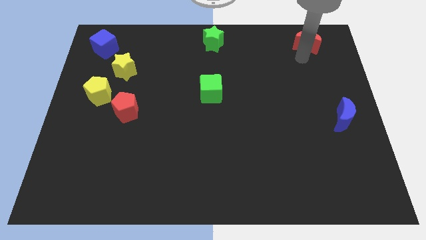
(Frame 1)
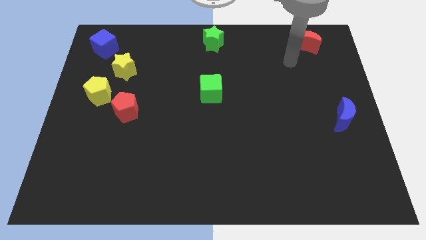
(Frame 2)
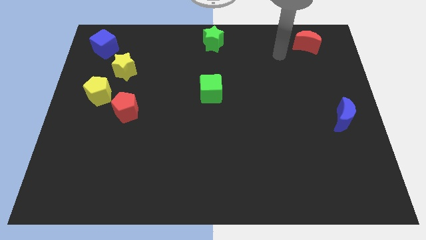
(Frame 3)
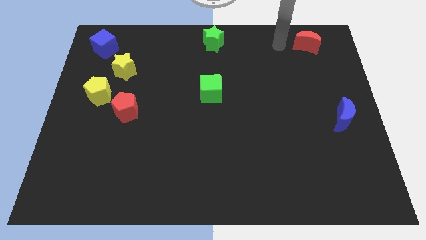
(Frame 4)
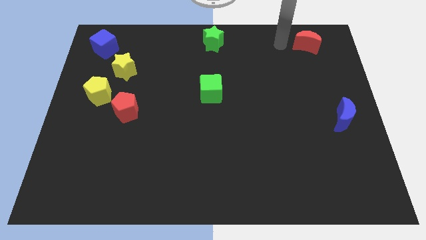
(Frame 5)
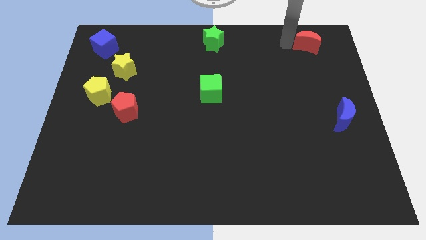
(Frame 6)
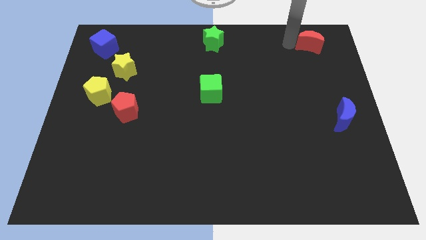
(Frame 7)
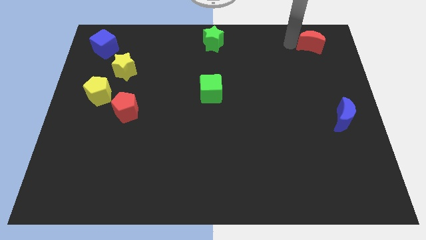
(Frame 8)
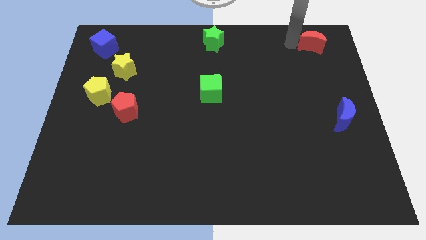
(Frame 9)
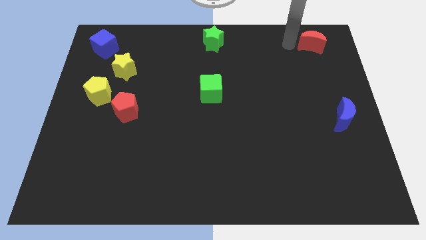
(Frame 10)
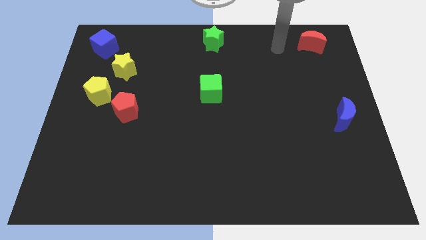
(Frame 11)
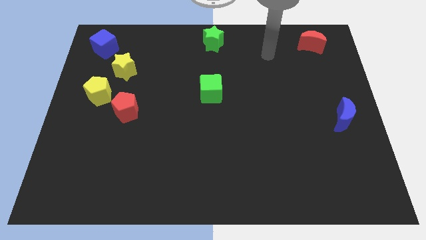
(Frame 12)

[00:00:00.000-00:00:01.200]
place the red crescent parallel to green star

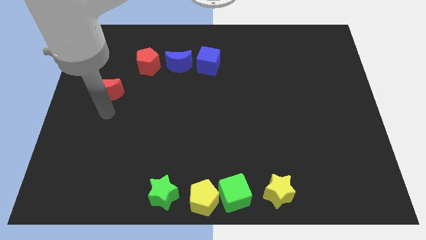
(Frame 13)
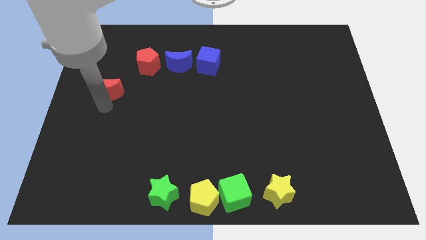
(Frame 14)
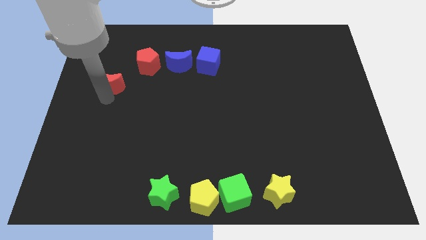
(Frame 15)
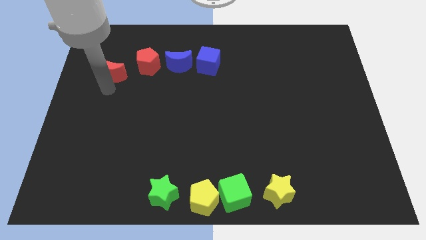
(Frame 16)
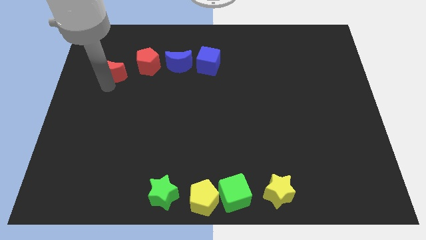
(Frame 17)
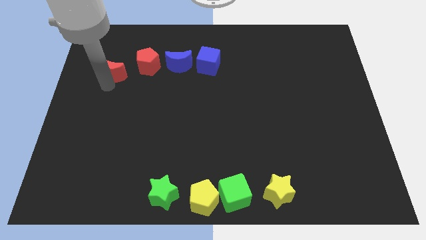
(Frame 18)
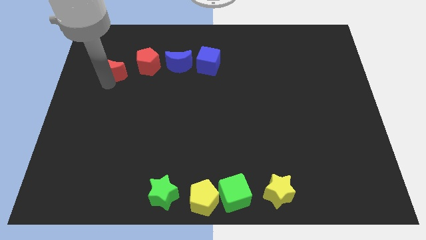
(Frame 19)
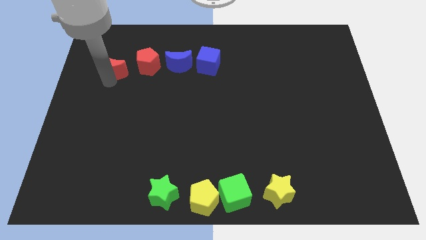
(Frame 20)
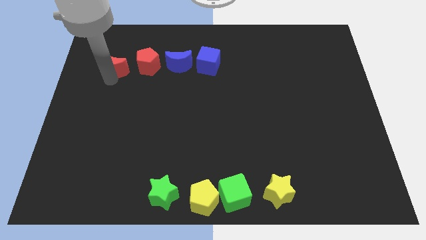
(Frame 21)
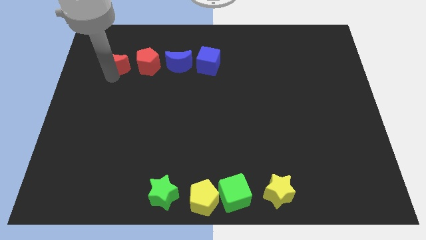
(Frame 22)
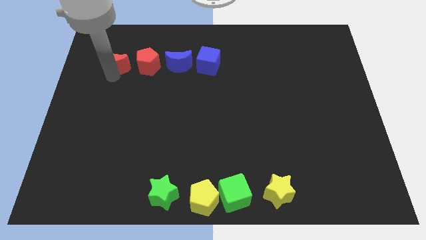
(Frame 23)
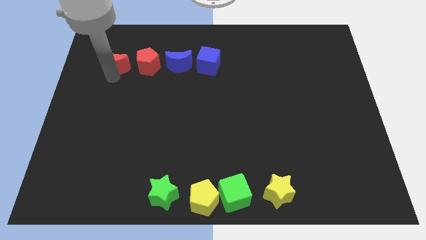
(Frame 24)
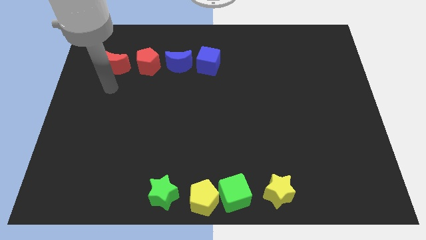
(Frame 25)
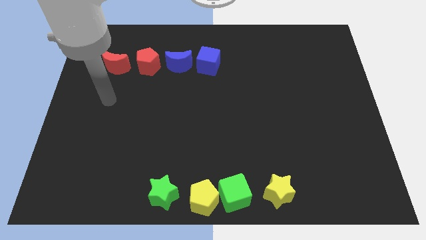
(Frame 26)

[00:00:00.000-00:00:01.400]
slightly push the red moon towards the red pentagon

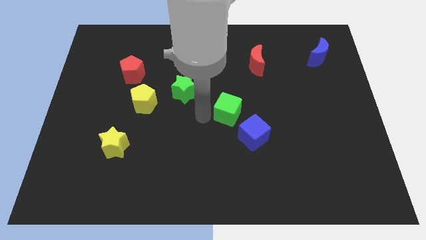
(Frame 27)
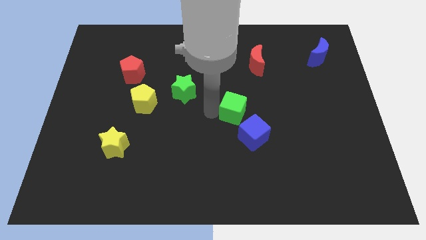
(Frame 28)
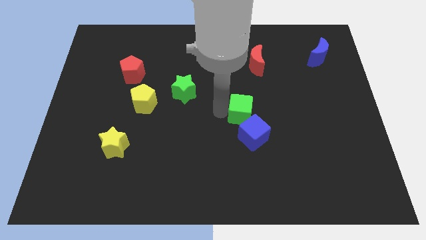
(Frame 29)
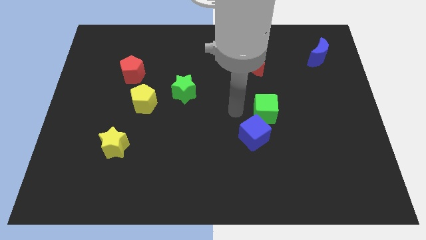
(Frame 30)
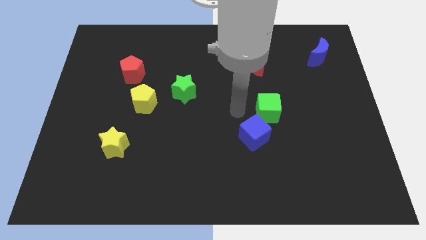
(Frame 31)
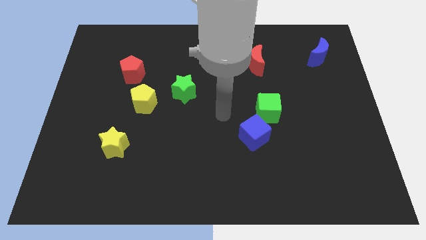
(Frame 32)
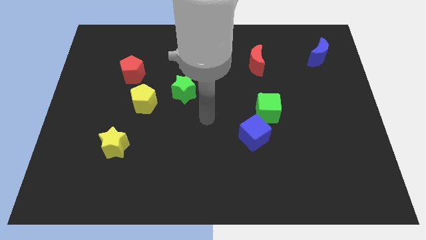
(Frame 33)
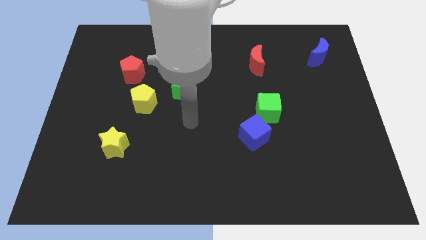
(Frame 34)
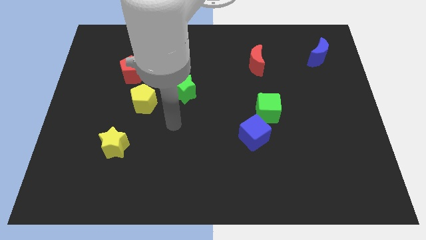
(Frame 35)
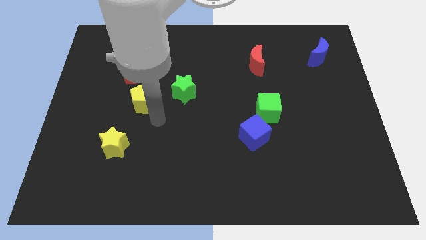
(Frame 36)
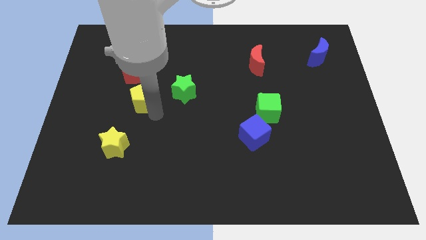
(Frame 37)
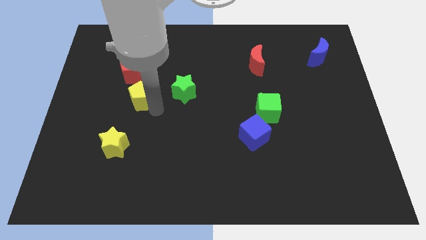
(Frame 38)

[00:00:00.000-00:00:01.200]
place the green cube diagonally top right to the blue block

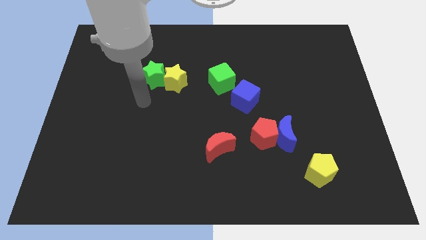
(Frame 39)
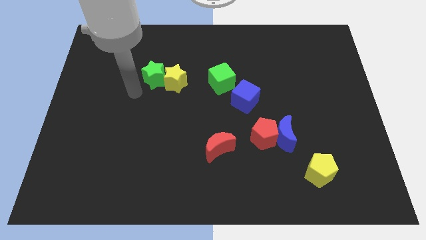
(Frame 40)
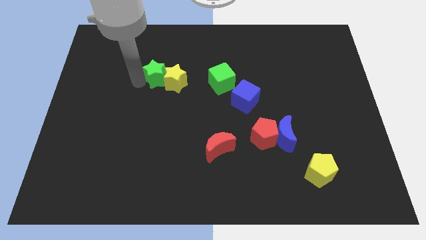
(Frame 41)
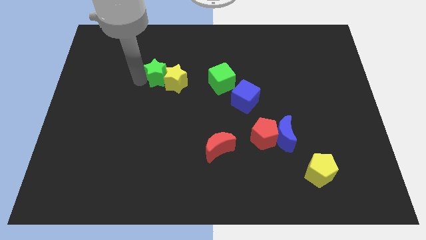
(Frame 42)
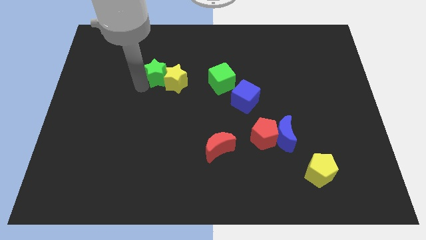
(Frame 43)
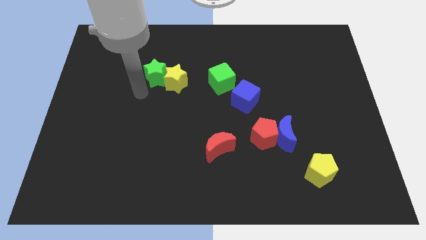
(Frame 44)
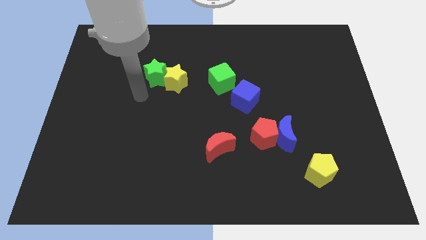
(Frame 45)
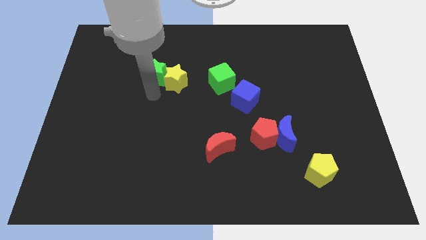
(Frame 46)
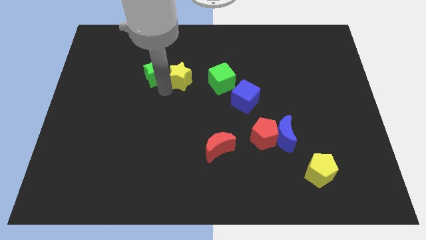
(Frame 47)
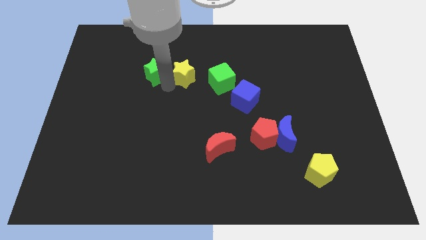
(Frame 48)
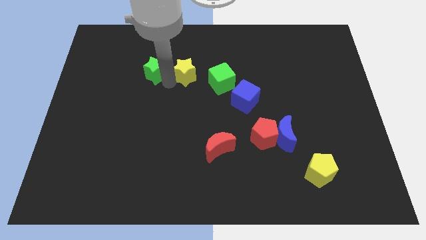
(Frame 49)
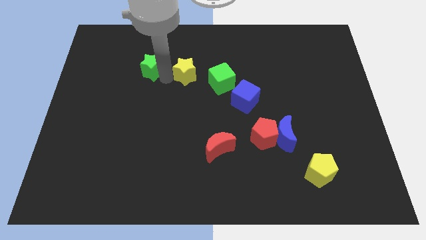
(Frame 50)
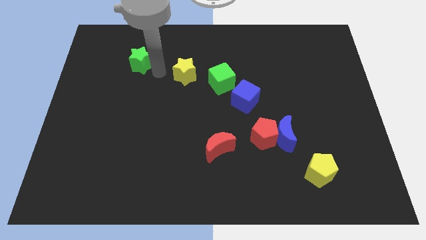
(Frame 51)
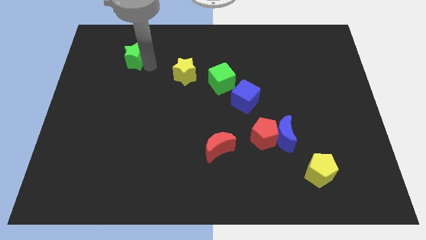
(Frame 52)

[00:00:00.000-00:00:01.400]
separate the green star from the yellow star

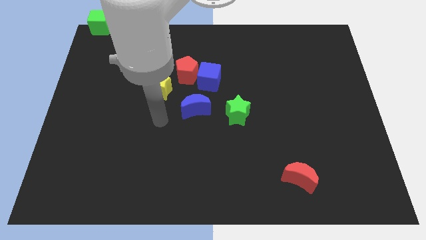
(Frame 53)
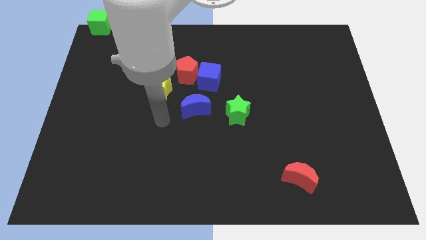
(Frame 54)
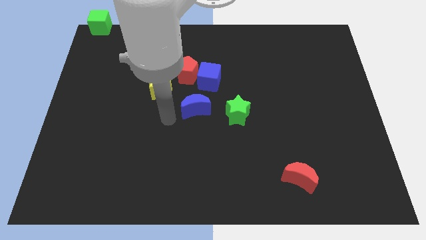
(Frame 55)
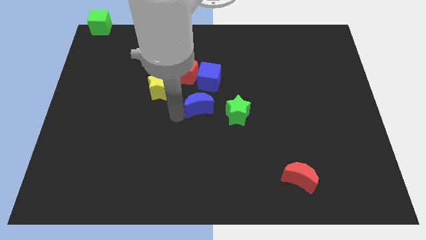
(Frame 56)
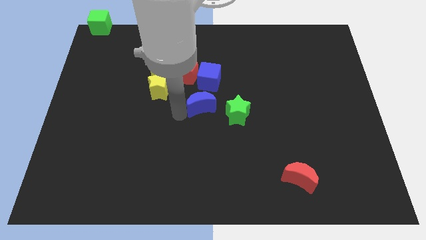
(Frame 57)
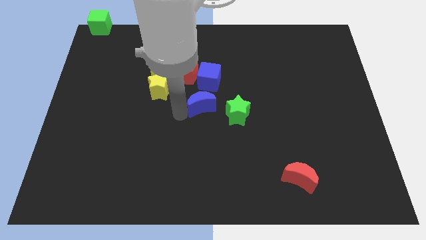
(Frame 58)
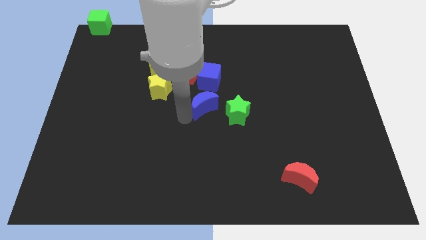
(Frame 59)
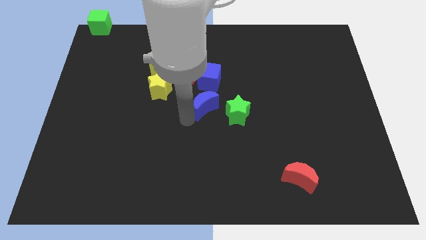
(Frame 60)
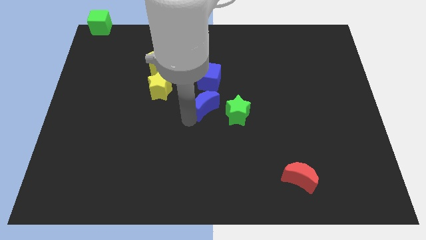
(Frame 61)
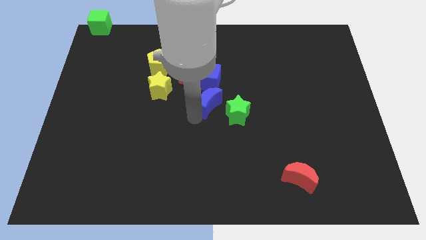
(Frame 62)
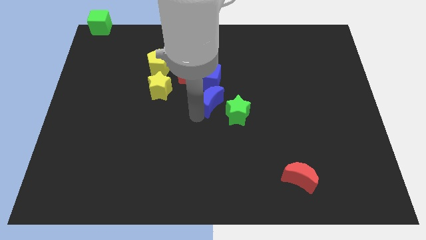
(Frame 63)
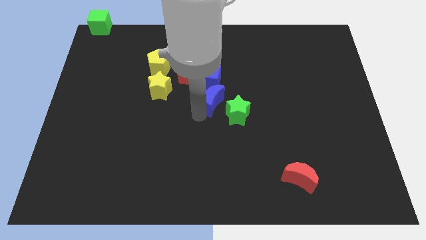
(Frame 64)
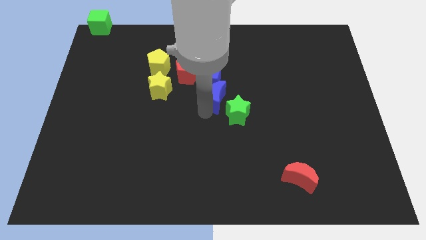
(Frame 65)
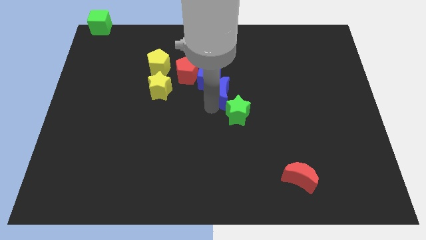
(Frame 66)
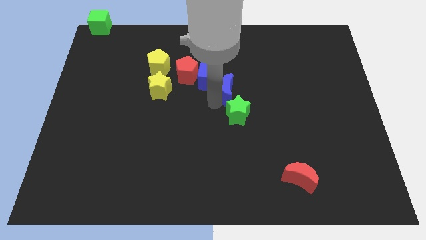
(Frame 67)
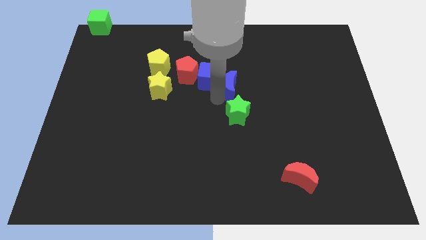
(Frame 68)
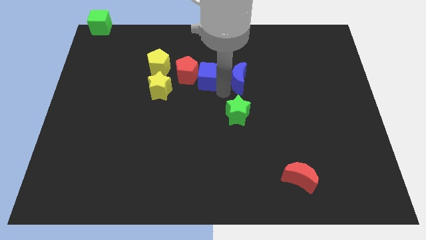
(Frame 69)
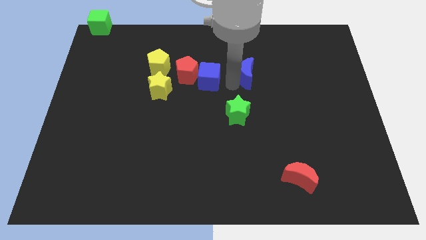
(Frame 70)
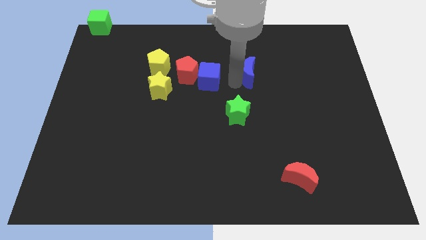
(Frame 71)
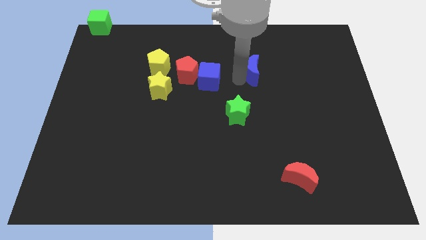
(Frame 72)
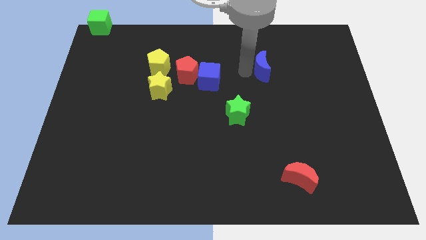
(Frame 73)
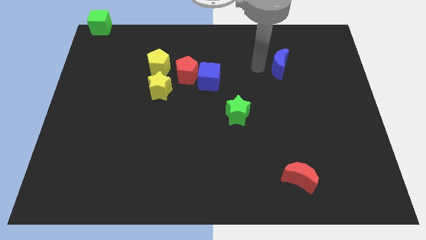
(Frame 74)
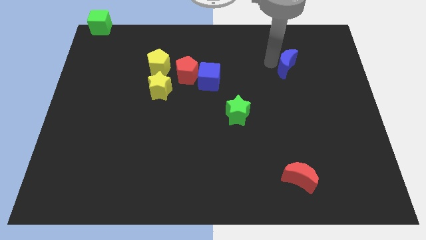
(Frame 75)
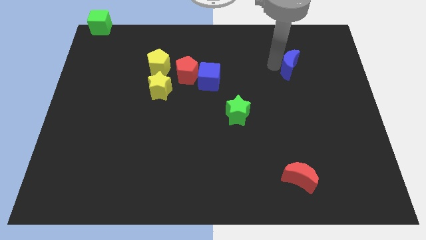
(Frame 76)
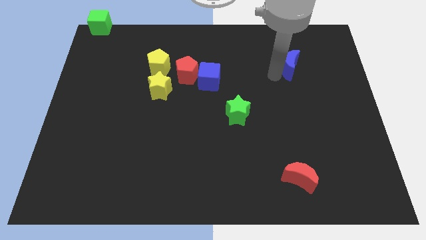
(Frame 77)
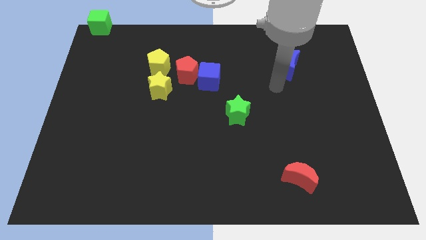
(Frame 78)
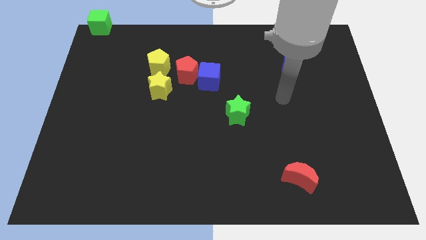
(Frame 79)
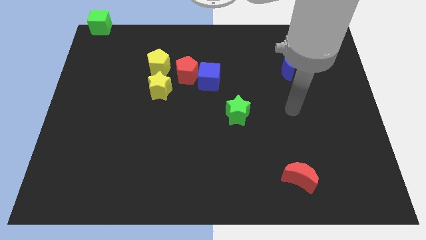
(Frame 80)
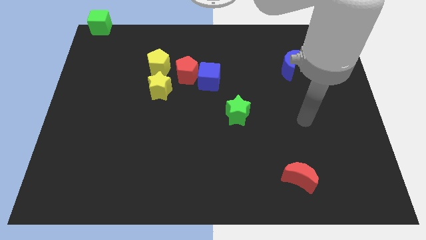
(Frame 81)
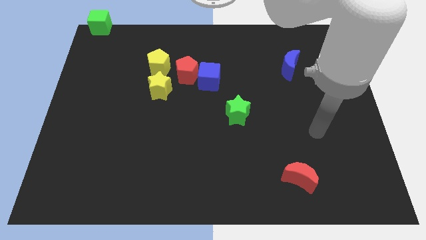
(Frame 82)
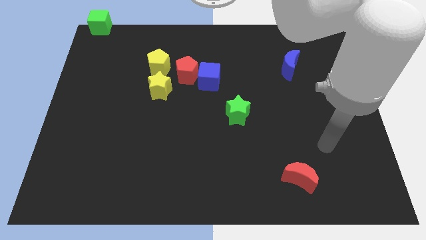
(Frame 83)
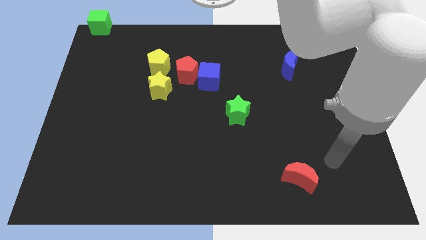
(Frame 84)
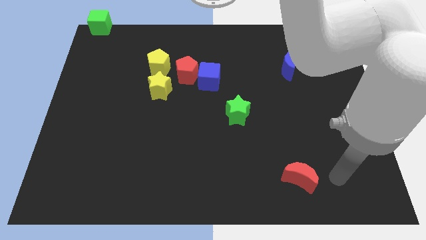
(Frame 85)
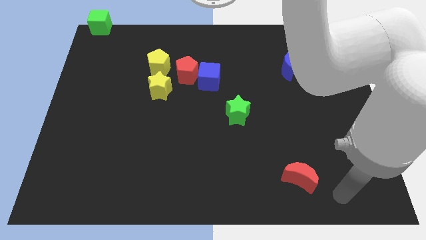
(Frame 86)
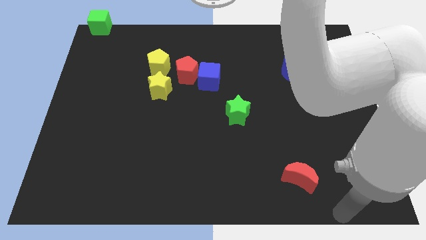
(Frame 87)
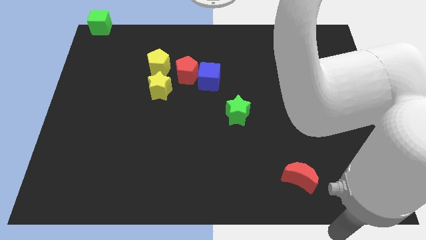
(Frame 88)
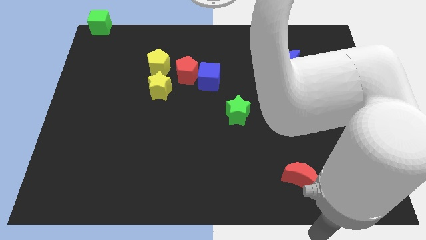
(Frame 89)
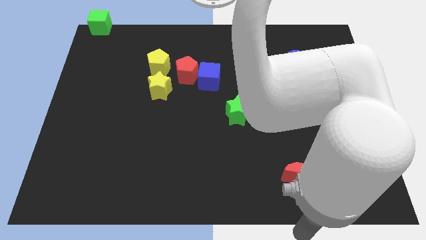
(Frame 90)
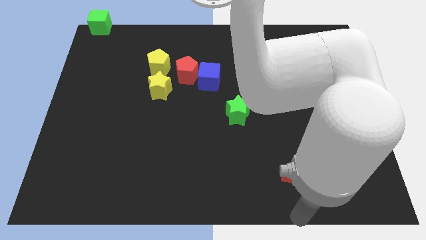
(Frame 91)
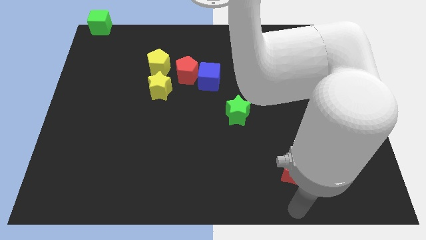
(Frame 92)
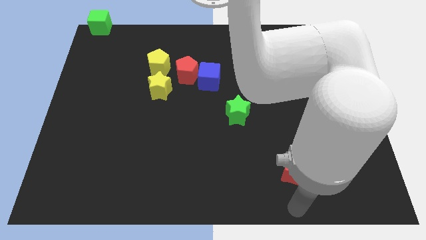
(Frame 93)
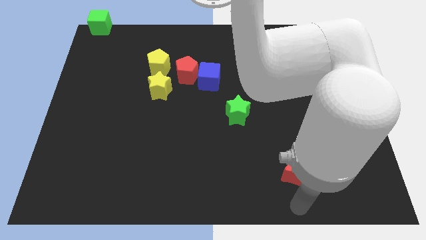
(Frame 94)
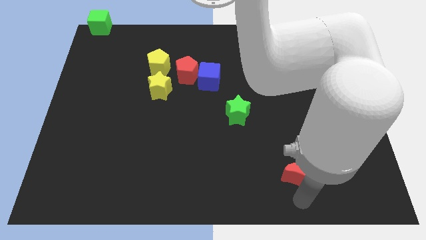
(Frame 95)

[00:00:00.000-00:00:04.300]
place the blue crescent to the right side of the blue cube
